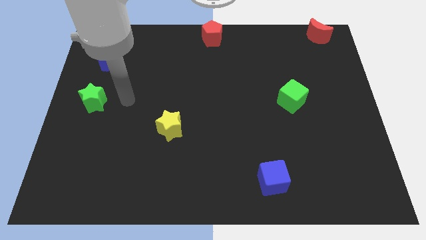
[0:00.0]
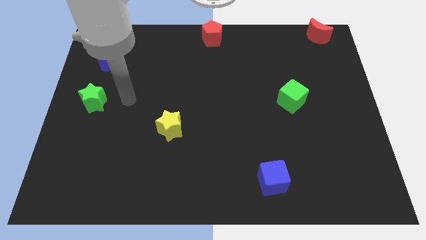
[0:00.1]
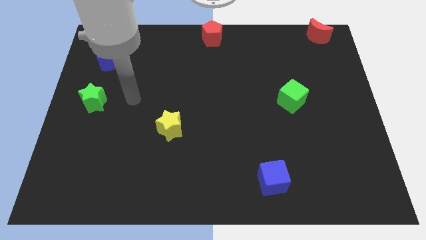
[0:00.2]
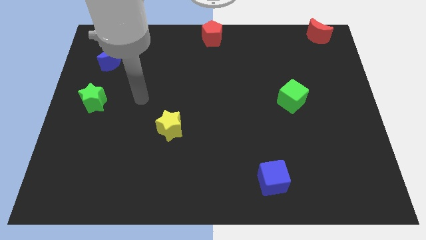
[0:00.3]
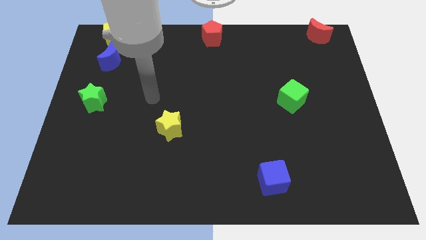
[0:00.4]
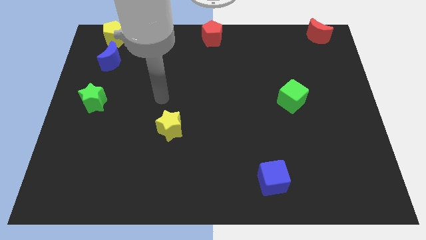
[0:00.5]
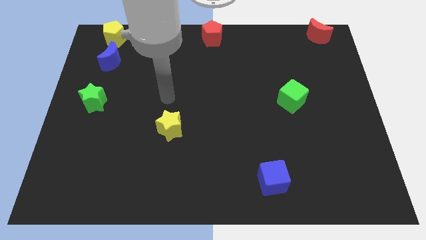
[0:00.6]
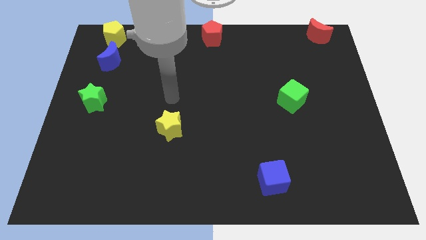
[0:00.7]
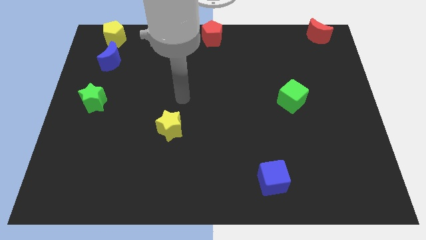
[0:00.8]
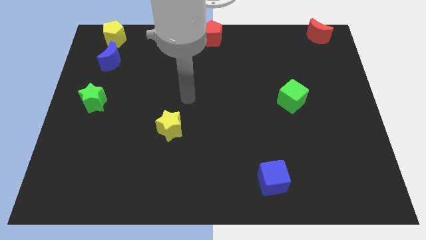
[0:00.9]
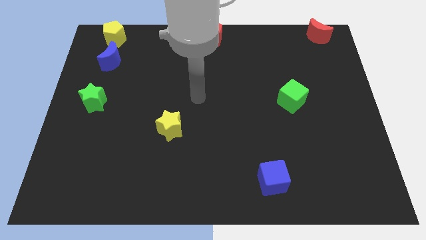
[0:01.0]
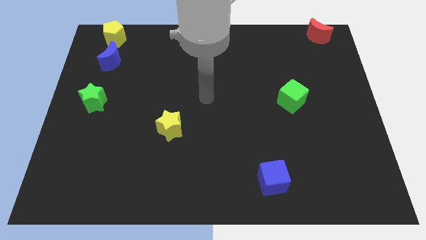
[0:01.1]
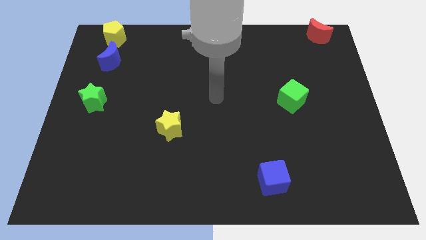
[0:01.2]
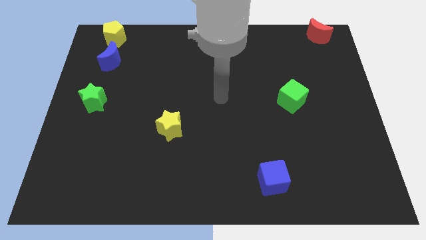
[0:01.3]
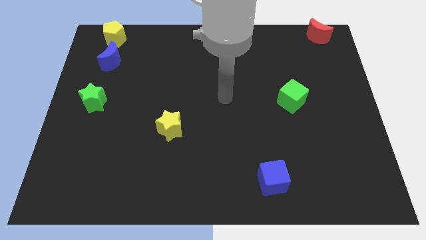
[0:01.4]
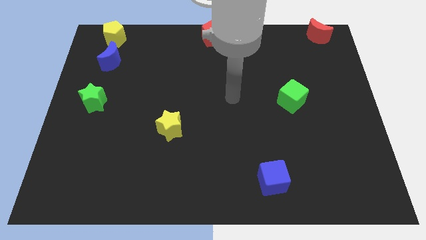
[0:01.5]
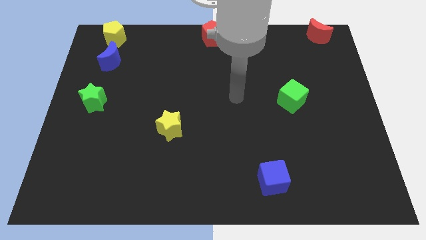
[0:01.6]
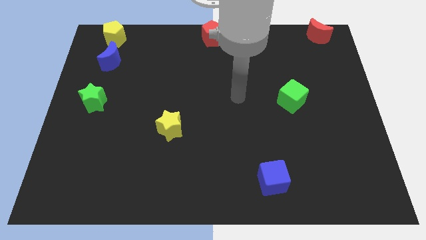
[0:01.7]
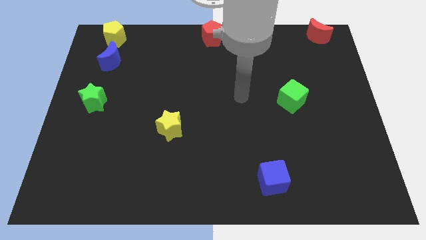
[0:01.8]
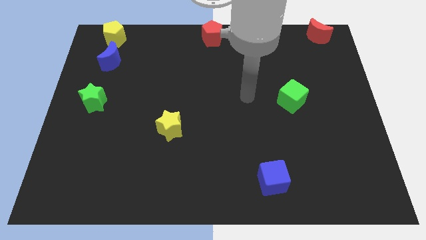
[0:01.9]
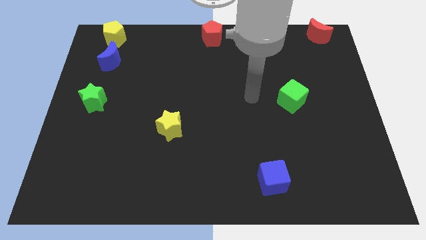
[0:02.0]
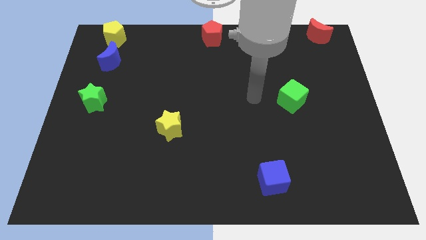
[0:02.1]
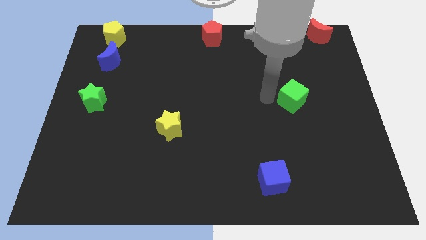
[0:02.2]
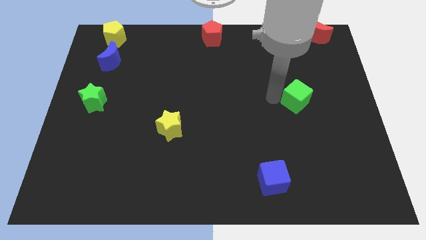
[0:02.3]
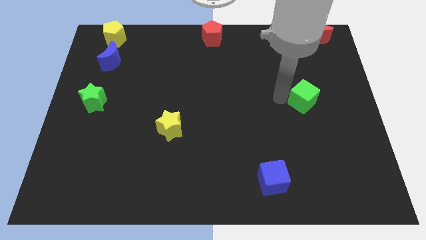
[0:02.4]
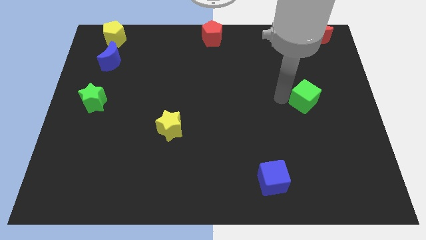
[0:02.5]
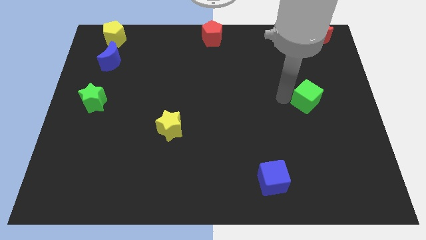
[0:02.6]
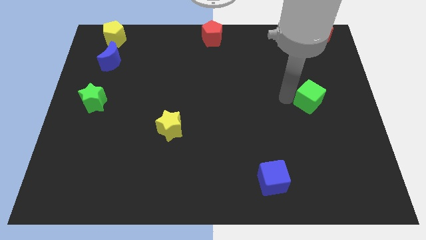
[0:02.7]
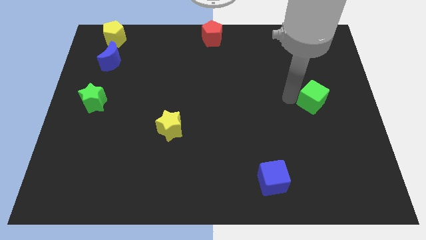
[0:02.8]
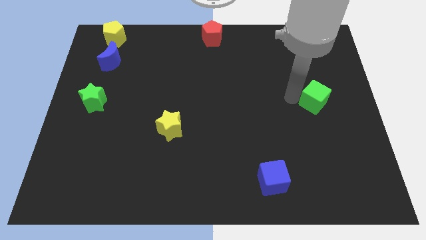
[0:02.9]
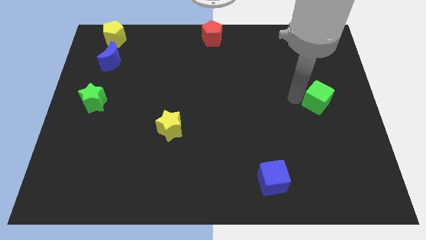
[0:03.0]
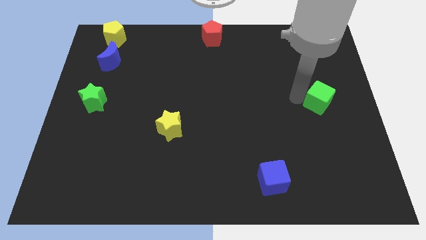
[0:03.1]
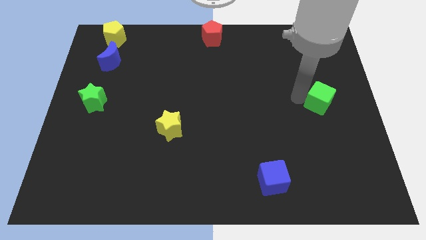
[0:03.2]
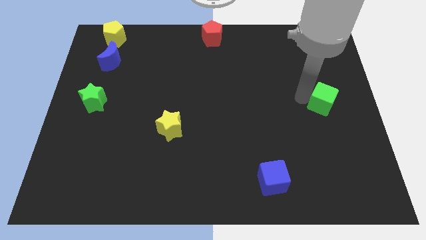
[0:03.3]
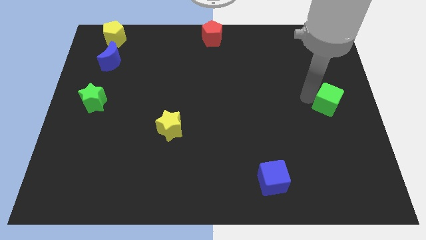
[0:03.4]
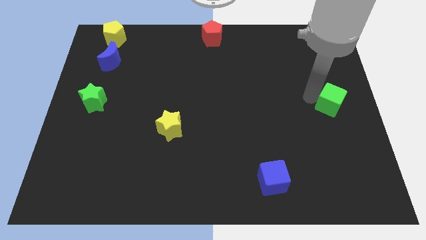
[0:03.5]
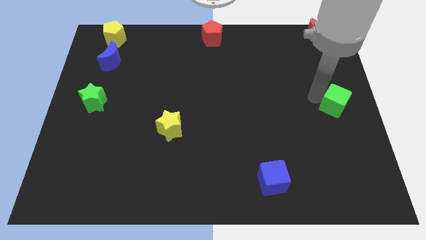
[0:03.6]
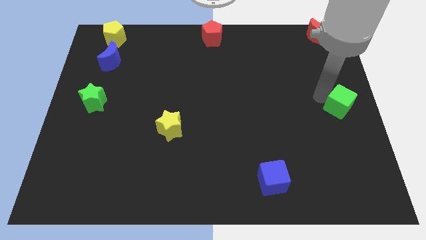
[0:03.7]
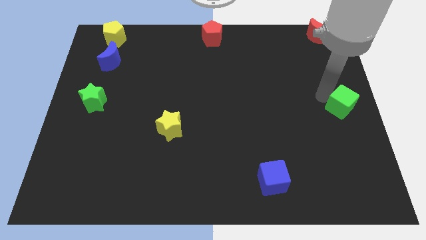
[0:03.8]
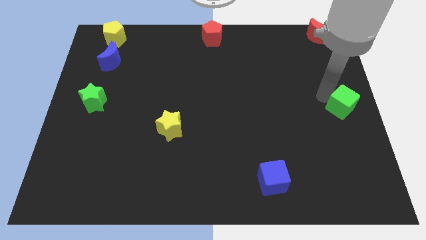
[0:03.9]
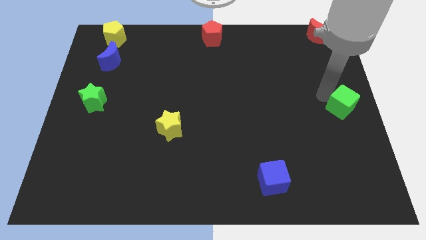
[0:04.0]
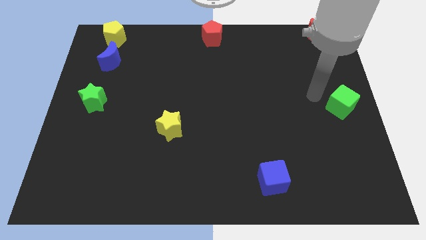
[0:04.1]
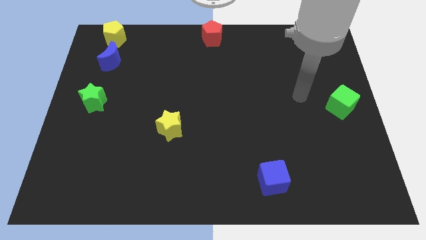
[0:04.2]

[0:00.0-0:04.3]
move the green cube to the right center

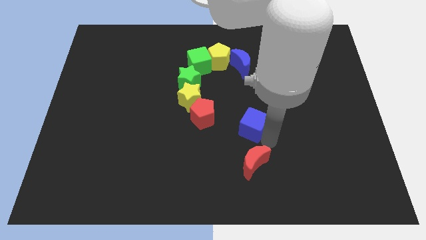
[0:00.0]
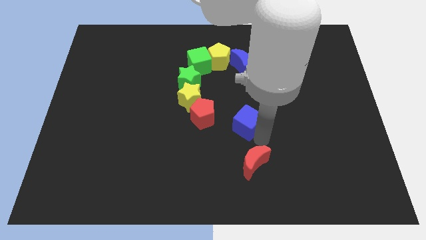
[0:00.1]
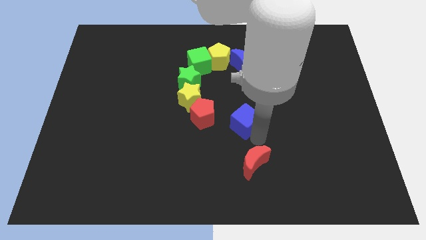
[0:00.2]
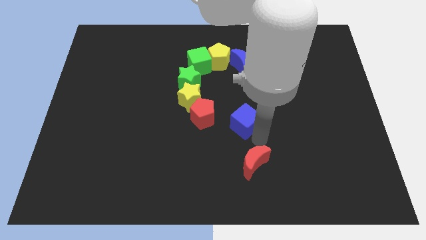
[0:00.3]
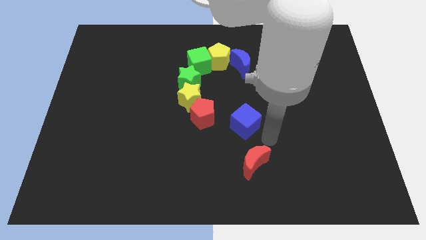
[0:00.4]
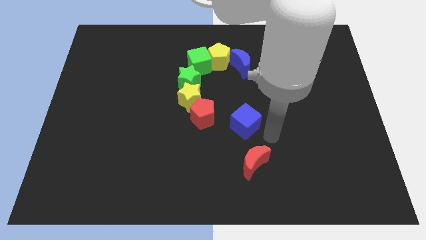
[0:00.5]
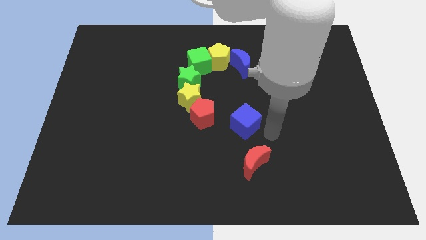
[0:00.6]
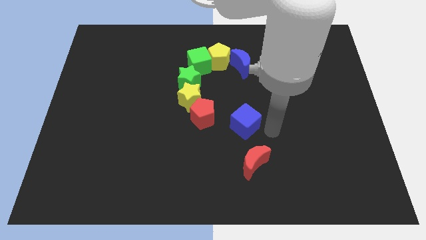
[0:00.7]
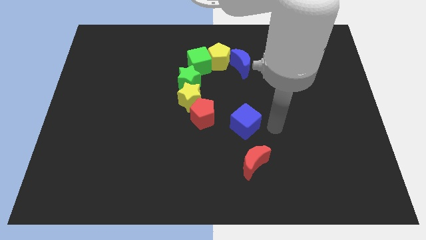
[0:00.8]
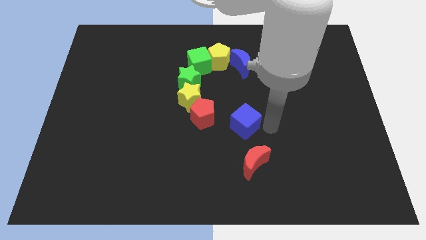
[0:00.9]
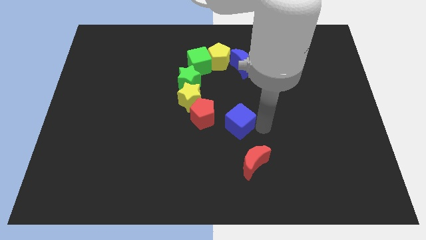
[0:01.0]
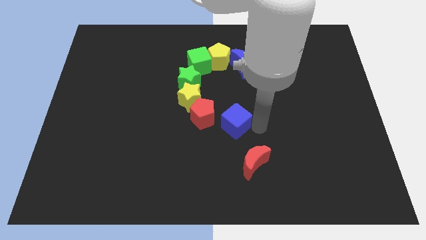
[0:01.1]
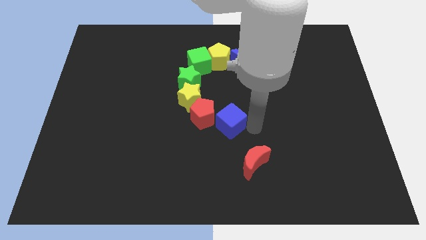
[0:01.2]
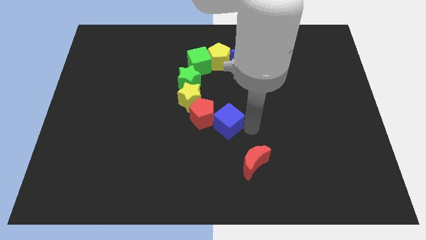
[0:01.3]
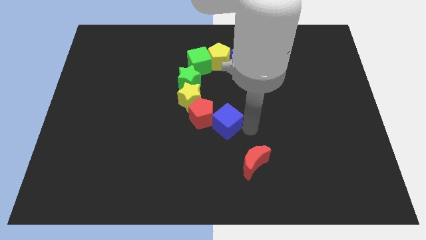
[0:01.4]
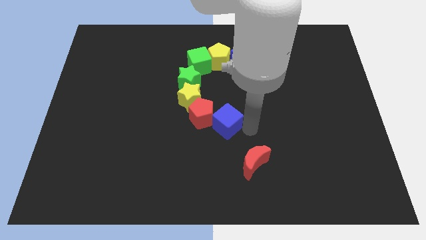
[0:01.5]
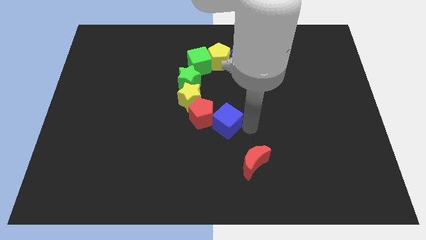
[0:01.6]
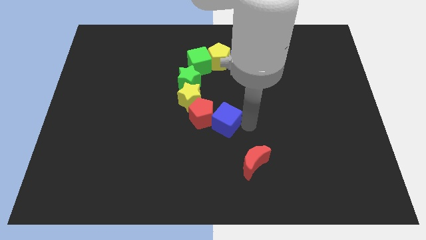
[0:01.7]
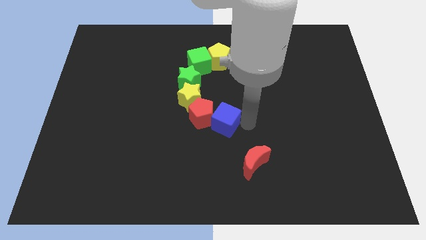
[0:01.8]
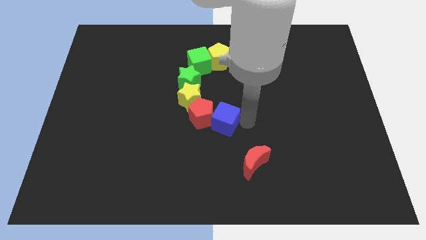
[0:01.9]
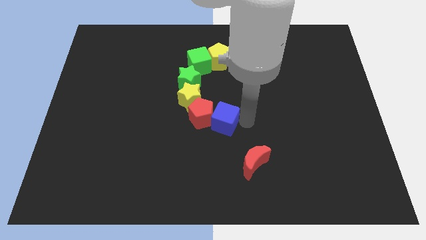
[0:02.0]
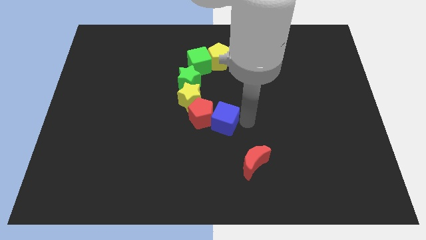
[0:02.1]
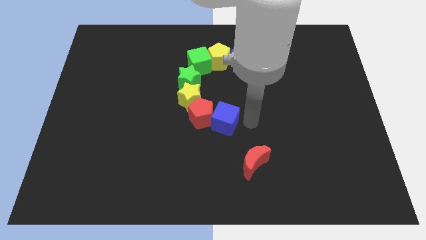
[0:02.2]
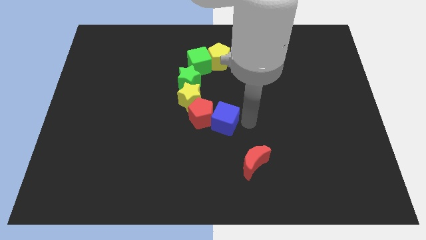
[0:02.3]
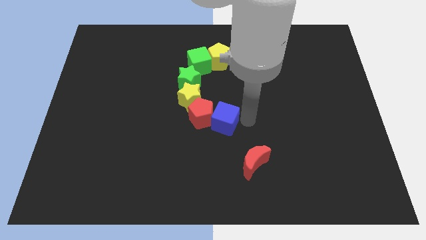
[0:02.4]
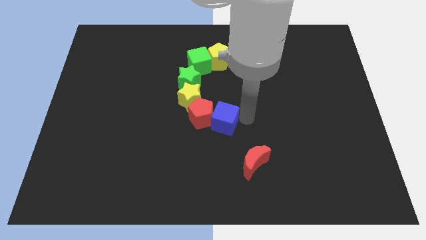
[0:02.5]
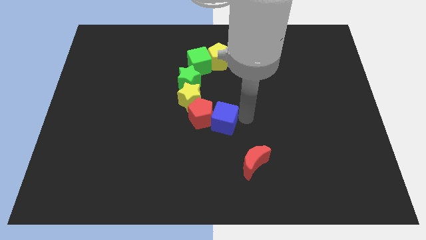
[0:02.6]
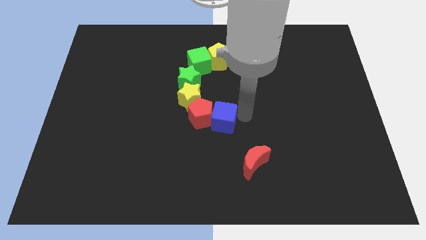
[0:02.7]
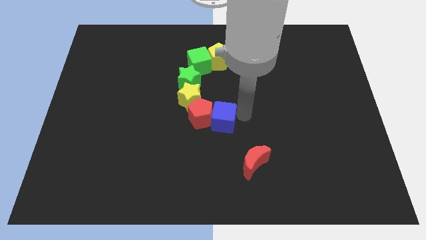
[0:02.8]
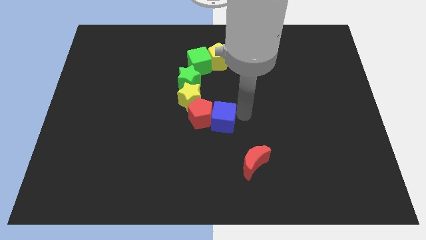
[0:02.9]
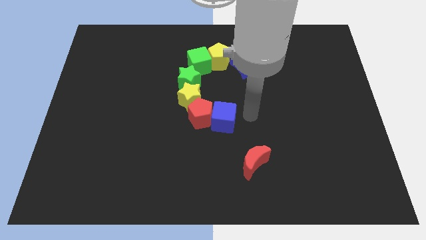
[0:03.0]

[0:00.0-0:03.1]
push the blue cube close to the red pentagon

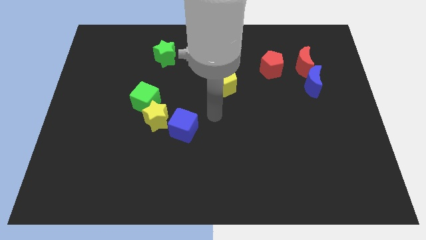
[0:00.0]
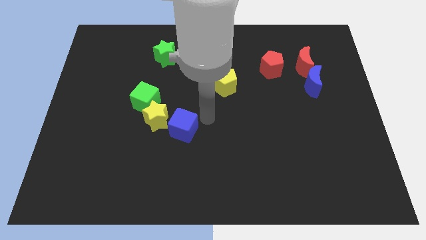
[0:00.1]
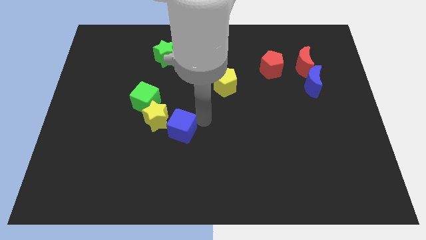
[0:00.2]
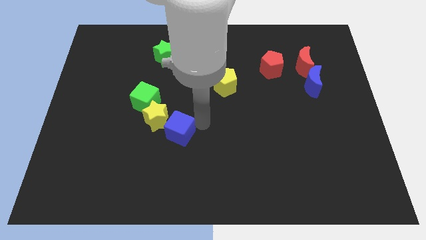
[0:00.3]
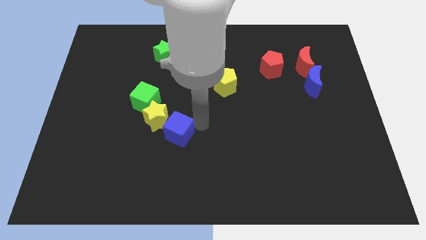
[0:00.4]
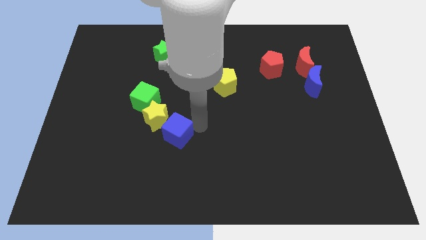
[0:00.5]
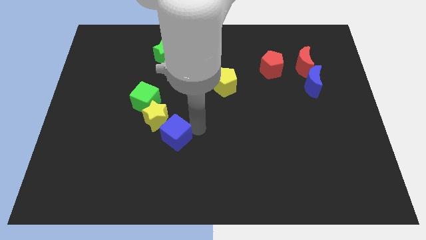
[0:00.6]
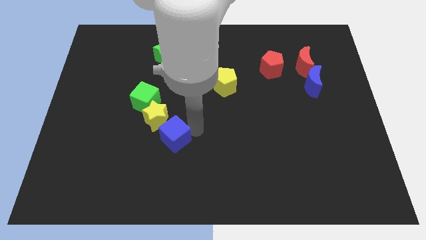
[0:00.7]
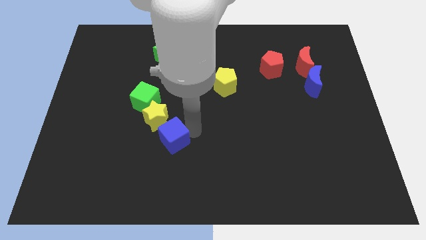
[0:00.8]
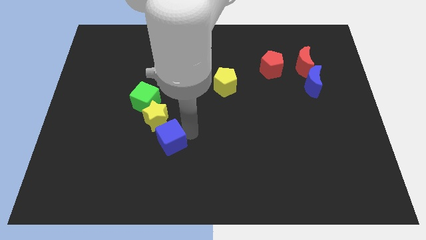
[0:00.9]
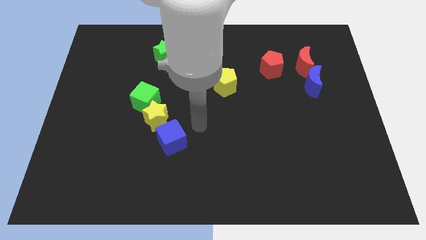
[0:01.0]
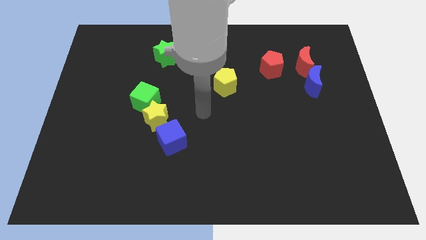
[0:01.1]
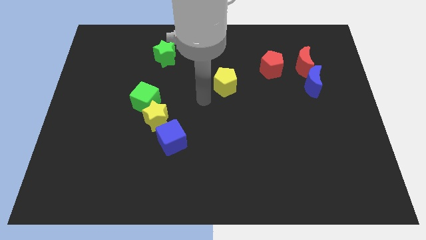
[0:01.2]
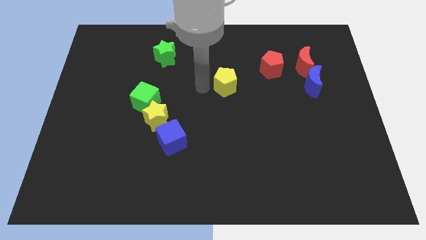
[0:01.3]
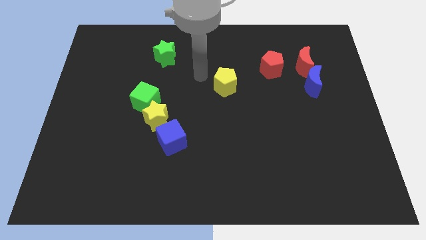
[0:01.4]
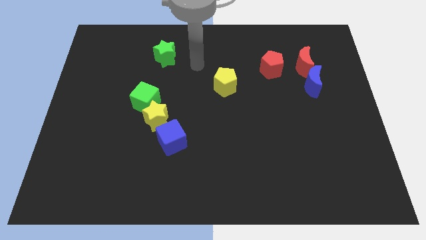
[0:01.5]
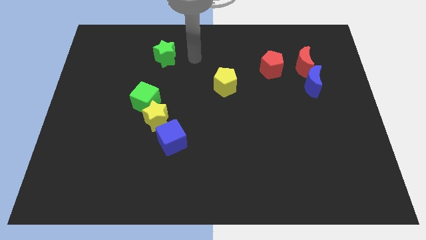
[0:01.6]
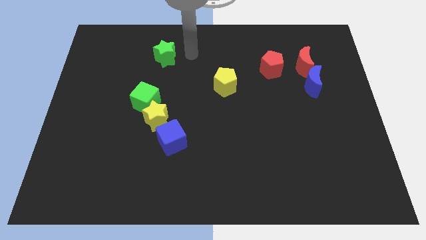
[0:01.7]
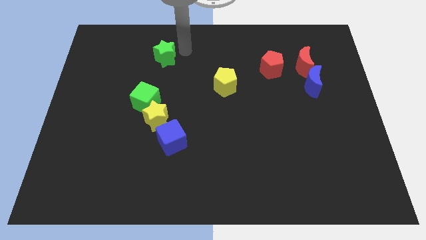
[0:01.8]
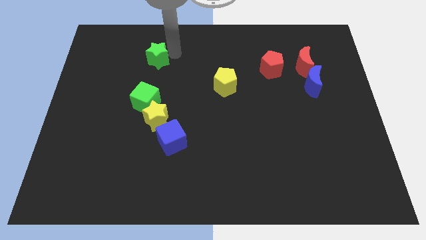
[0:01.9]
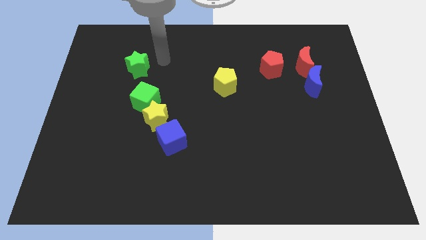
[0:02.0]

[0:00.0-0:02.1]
slightly move the blue cube diagonally to the yellow pentagon
